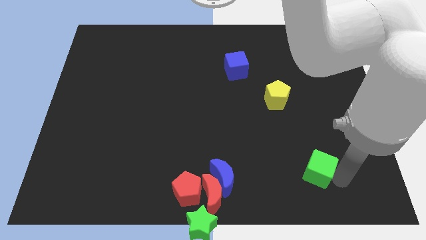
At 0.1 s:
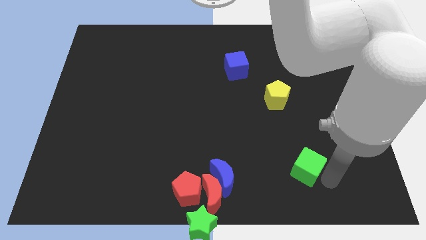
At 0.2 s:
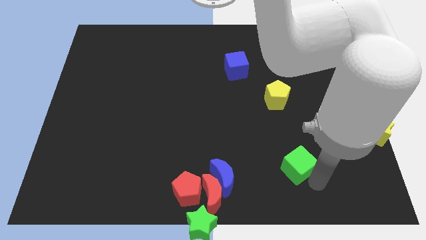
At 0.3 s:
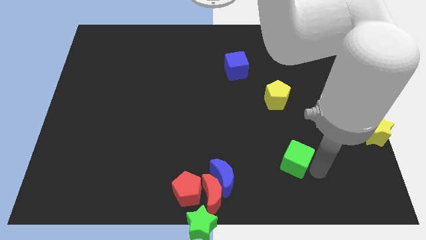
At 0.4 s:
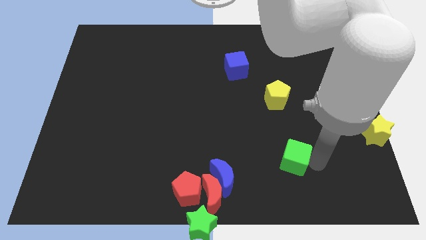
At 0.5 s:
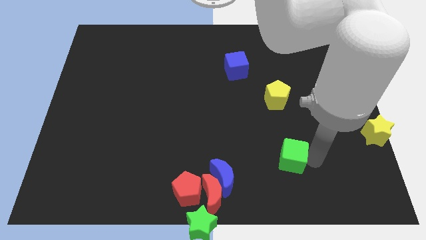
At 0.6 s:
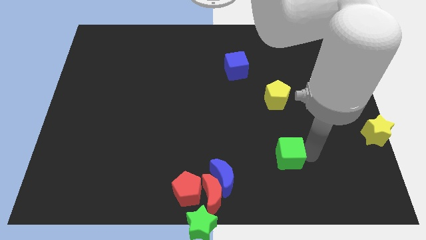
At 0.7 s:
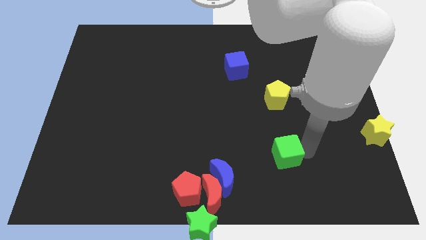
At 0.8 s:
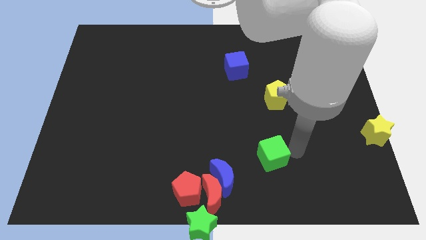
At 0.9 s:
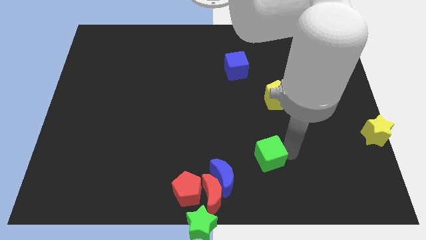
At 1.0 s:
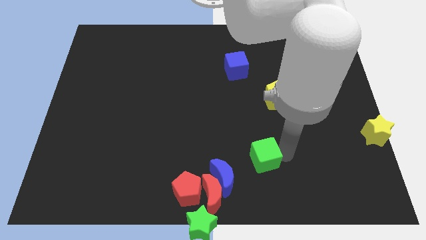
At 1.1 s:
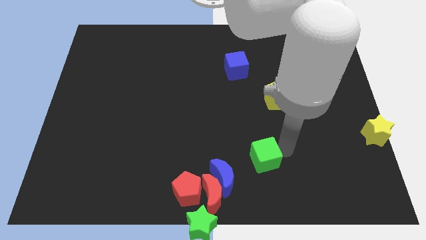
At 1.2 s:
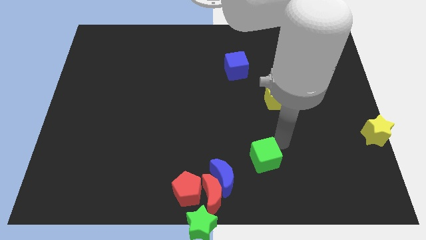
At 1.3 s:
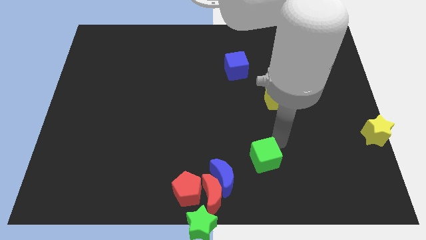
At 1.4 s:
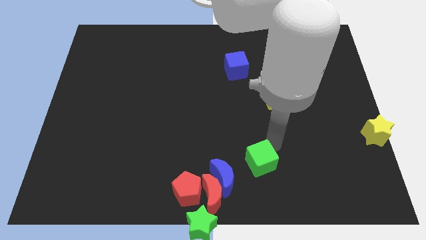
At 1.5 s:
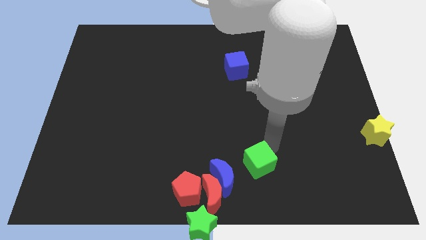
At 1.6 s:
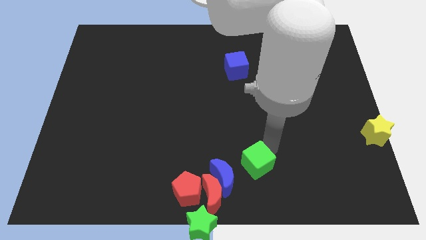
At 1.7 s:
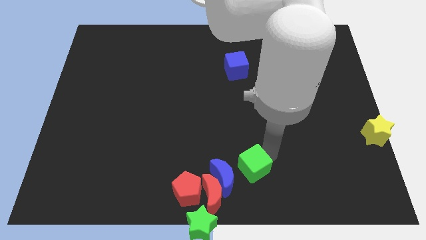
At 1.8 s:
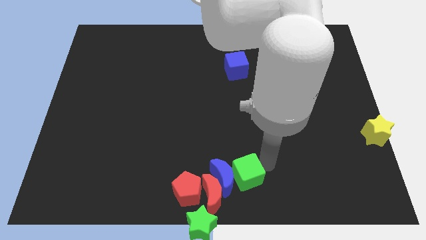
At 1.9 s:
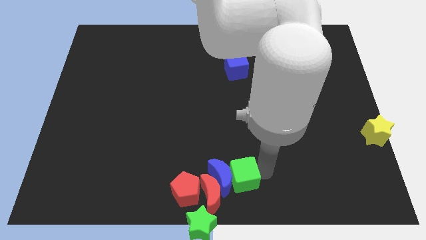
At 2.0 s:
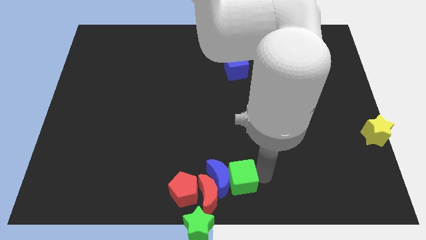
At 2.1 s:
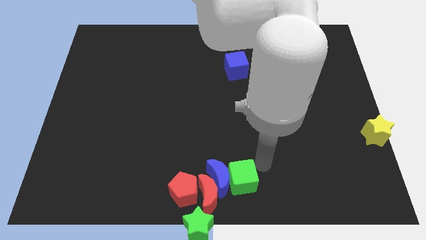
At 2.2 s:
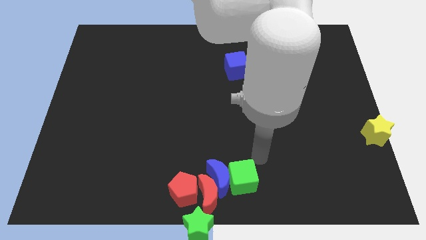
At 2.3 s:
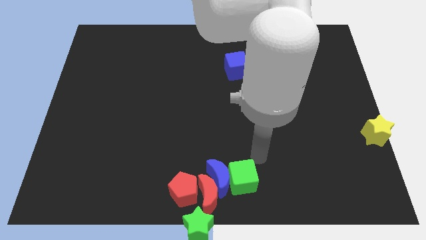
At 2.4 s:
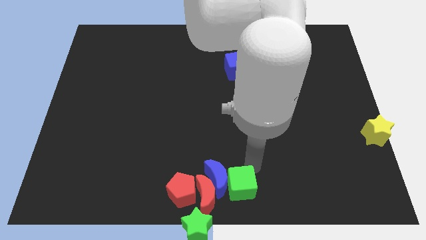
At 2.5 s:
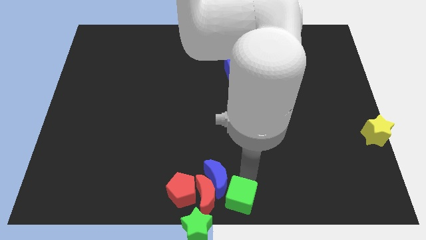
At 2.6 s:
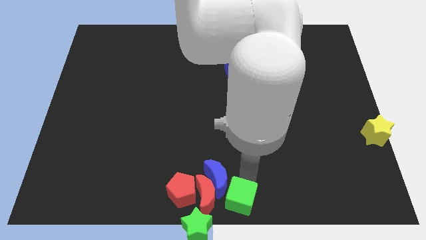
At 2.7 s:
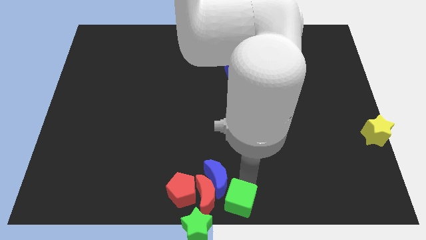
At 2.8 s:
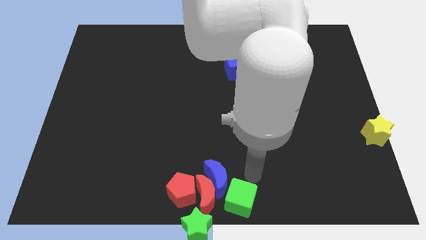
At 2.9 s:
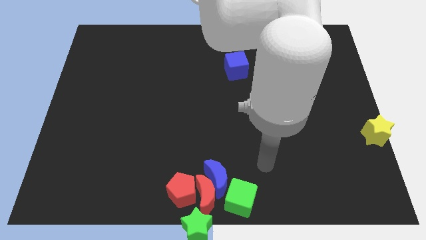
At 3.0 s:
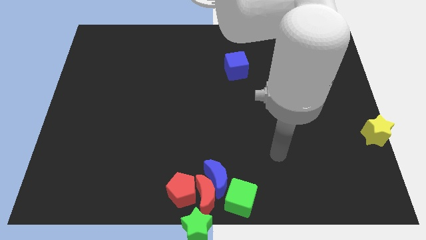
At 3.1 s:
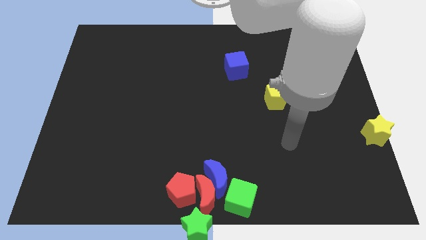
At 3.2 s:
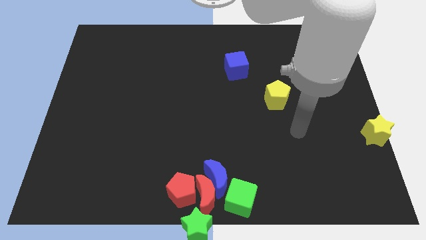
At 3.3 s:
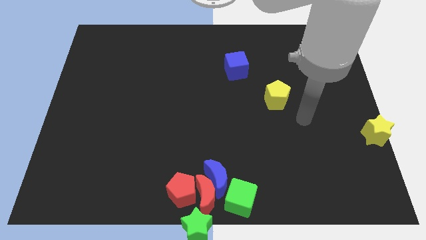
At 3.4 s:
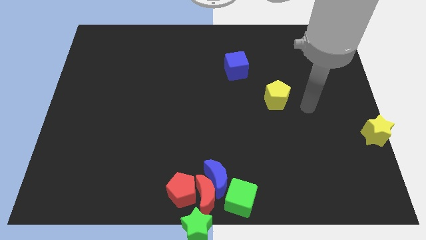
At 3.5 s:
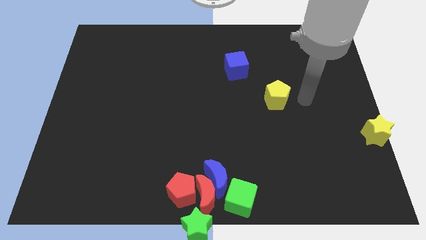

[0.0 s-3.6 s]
move the green cube to the bottom right side of the blue moon

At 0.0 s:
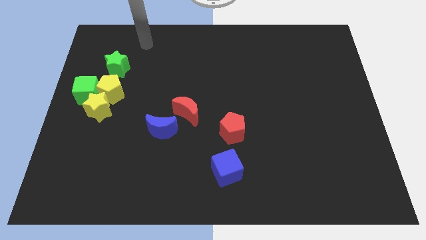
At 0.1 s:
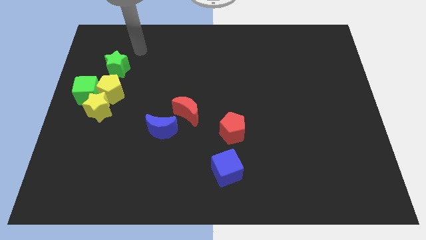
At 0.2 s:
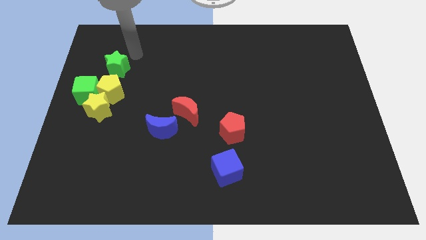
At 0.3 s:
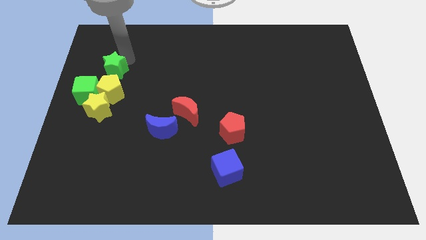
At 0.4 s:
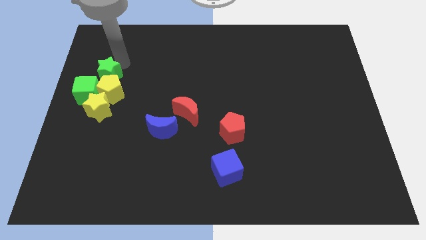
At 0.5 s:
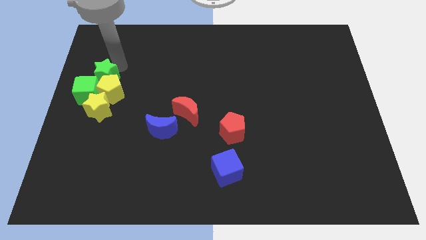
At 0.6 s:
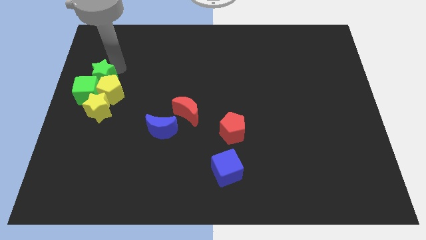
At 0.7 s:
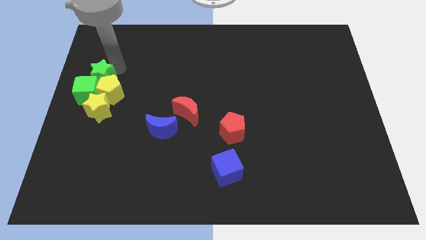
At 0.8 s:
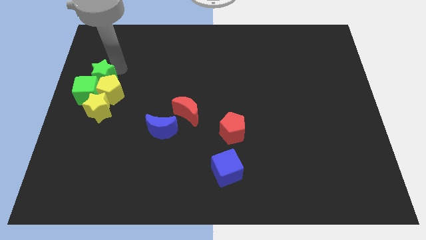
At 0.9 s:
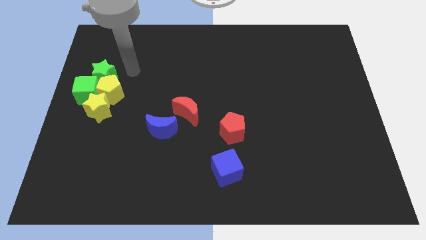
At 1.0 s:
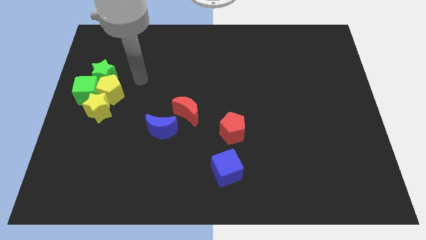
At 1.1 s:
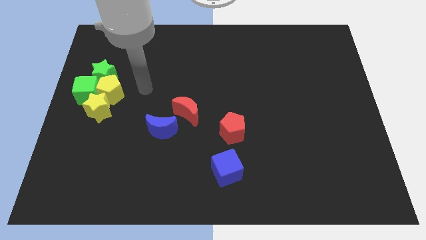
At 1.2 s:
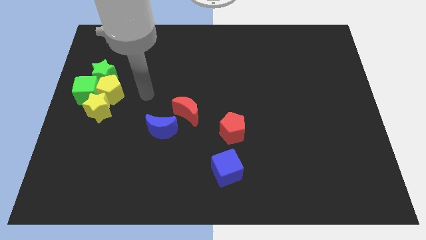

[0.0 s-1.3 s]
move the green star into the green cube and the yellow pentagon

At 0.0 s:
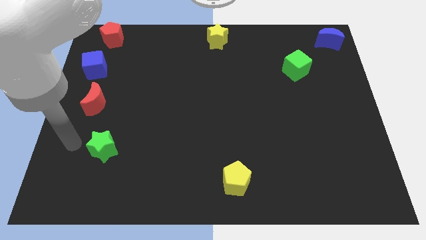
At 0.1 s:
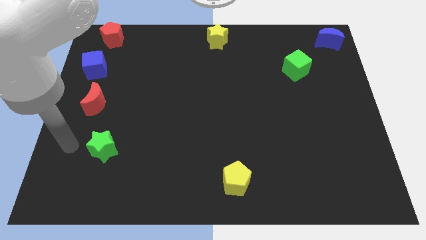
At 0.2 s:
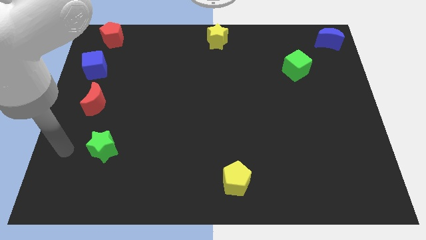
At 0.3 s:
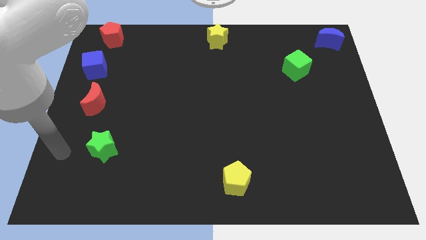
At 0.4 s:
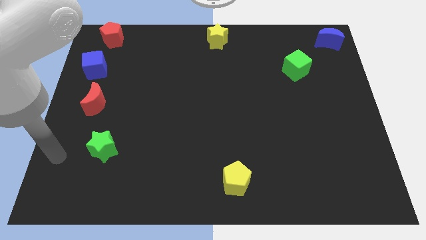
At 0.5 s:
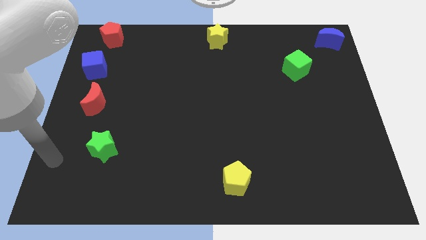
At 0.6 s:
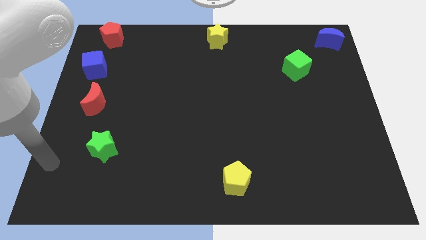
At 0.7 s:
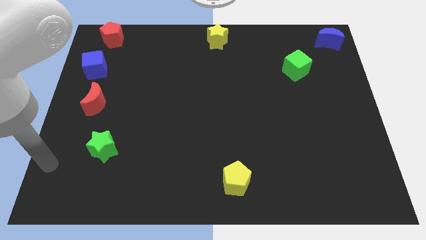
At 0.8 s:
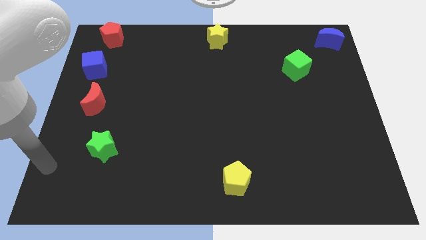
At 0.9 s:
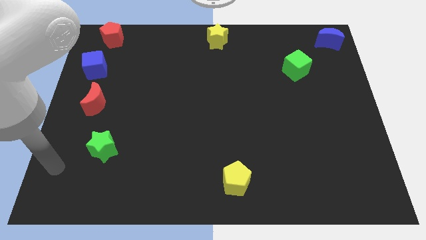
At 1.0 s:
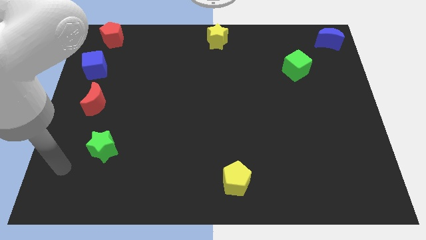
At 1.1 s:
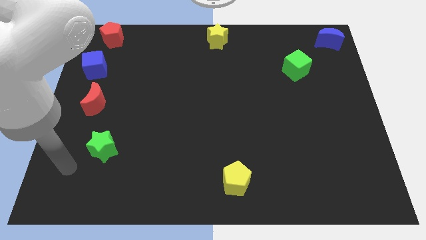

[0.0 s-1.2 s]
move your arm to the left of the green star

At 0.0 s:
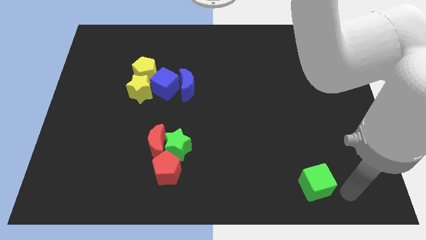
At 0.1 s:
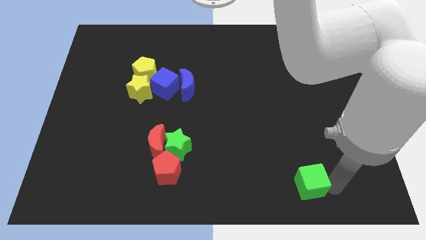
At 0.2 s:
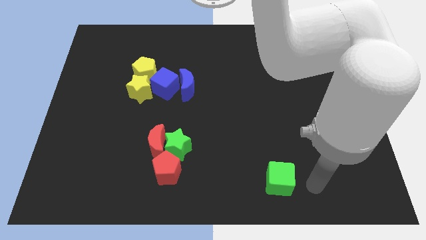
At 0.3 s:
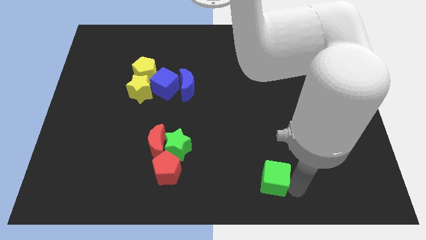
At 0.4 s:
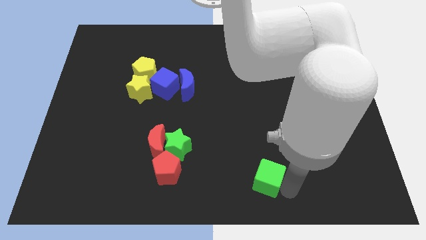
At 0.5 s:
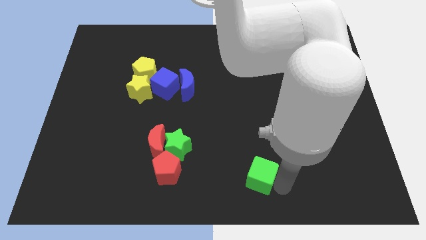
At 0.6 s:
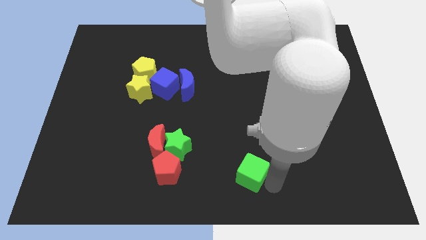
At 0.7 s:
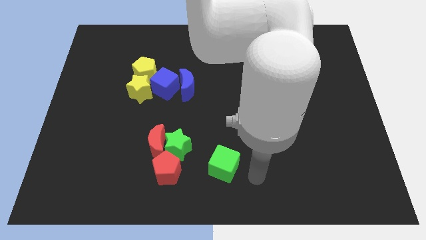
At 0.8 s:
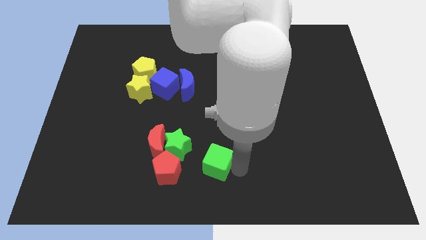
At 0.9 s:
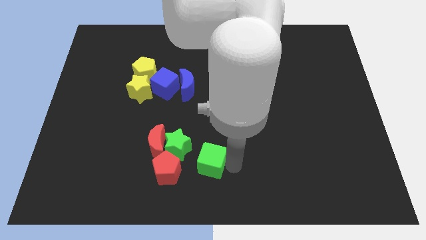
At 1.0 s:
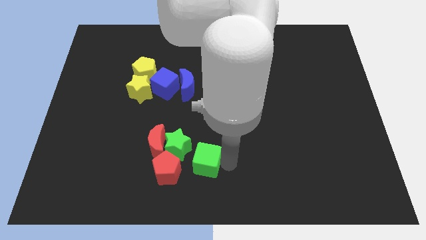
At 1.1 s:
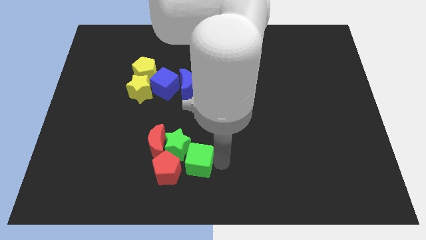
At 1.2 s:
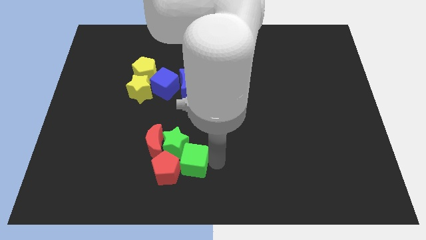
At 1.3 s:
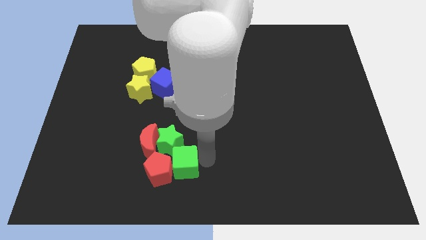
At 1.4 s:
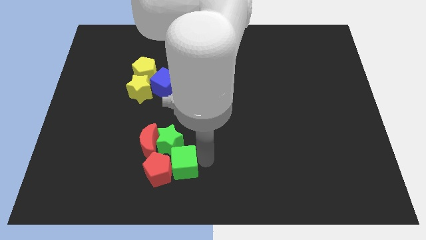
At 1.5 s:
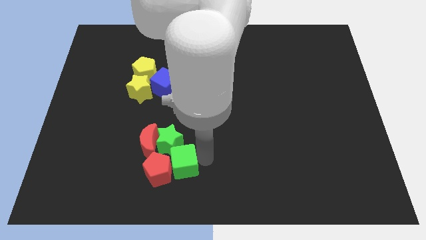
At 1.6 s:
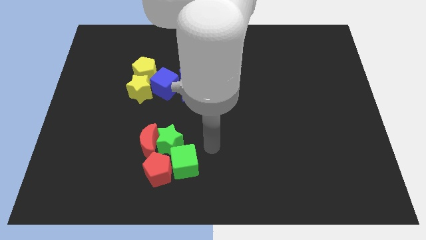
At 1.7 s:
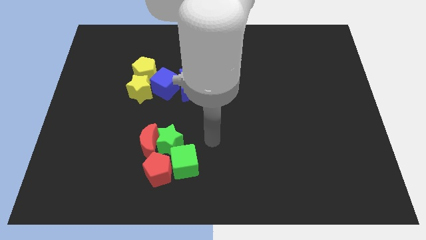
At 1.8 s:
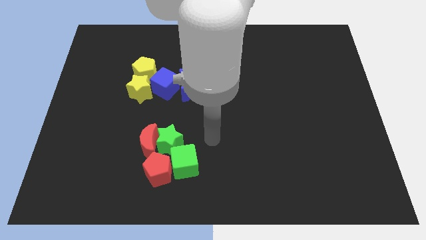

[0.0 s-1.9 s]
push the green cube into red pentagon

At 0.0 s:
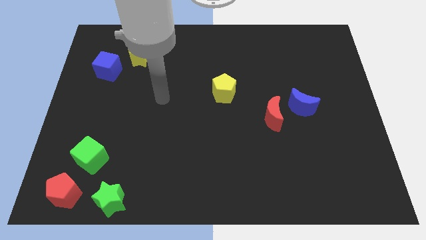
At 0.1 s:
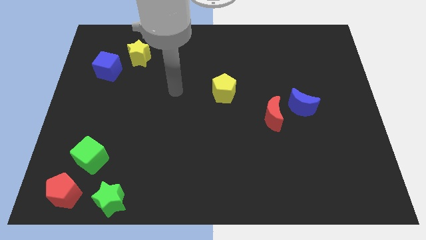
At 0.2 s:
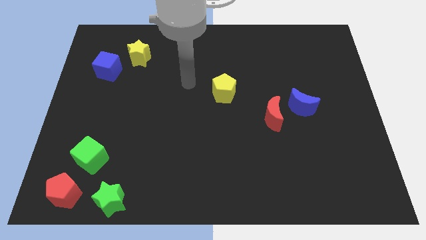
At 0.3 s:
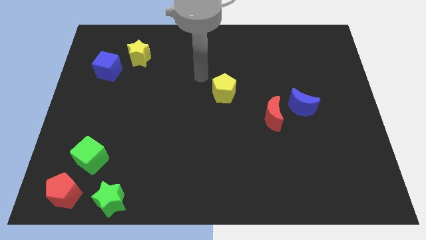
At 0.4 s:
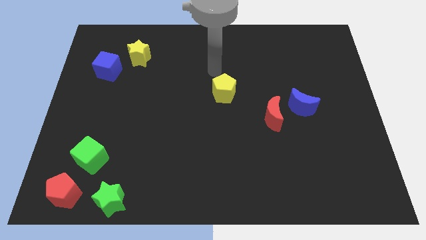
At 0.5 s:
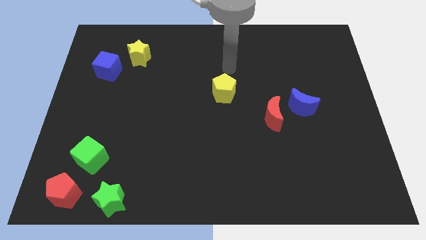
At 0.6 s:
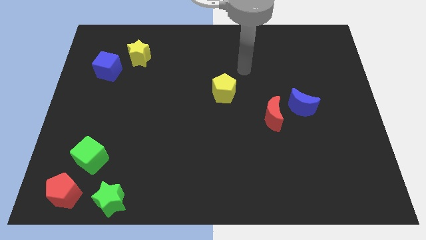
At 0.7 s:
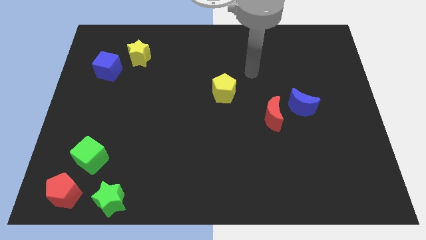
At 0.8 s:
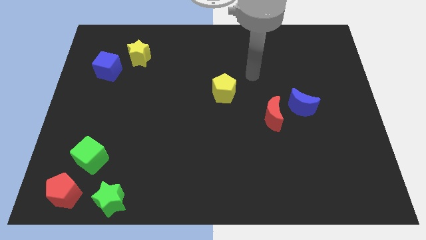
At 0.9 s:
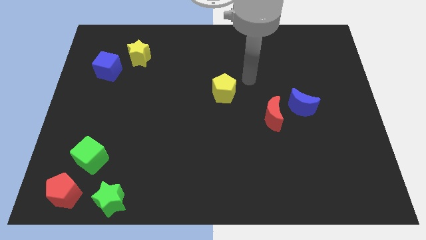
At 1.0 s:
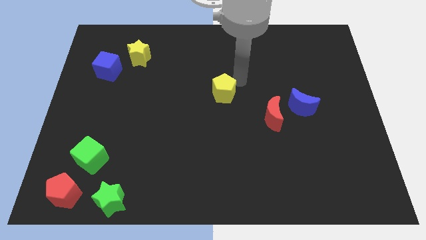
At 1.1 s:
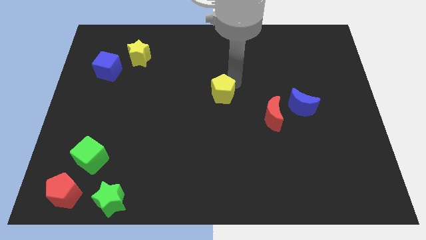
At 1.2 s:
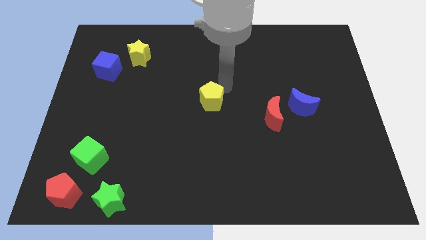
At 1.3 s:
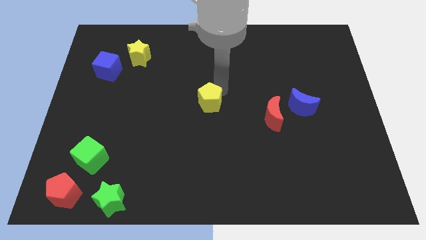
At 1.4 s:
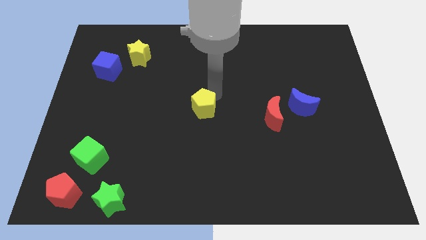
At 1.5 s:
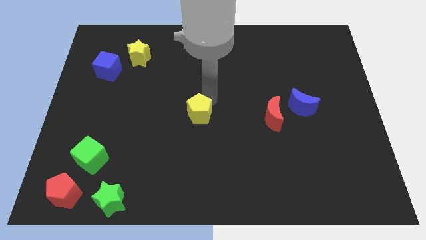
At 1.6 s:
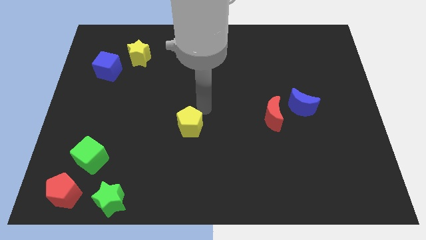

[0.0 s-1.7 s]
move the yellow pentagon at the left side of the red crescent
